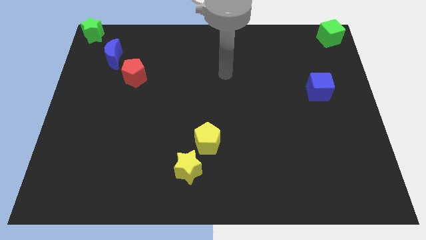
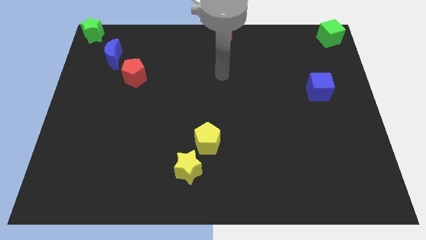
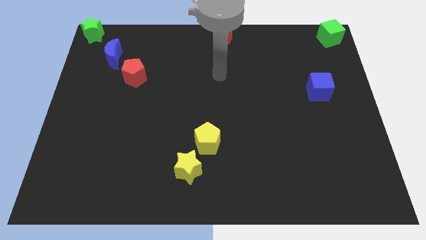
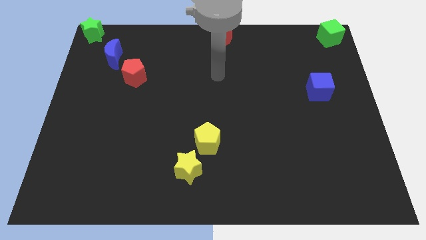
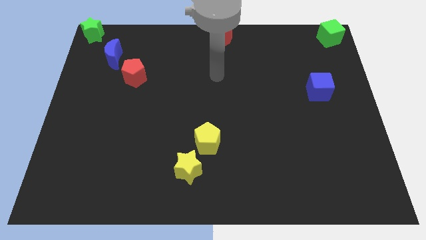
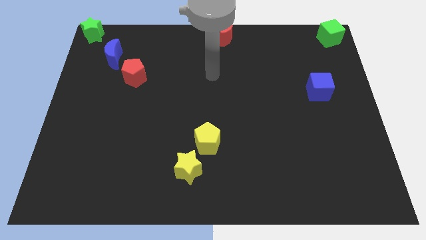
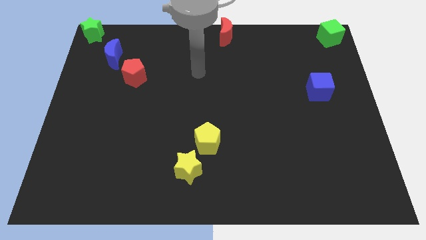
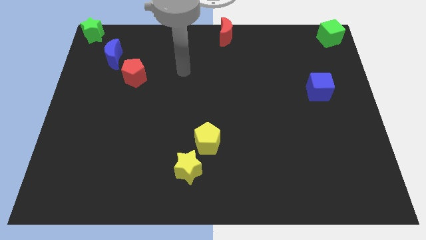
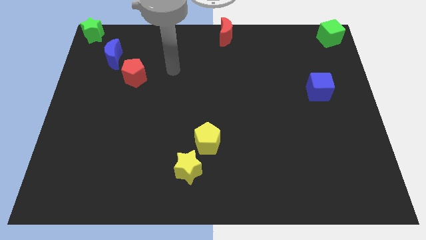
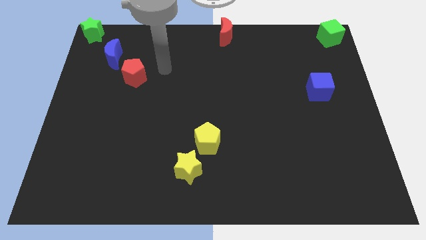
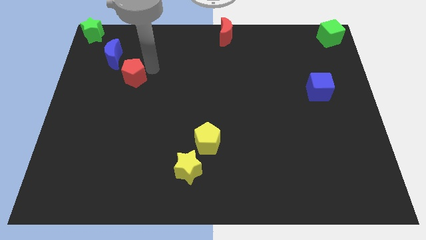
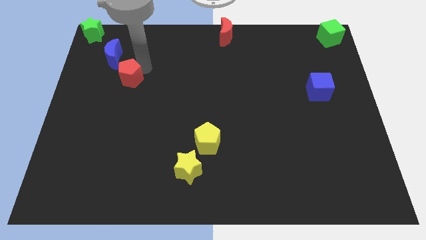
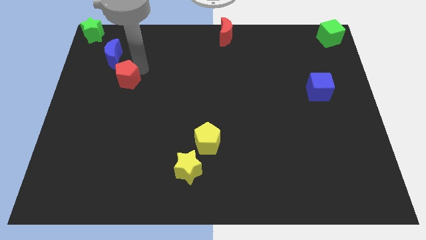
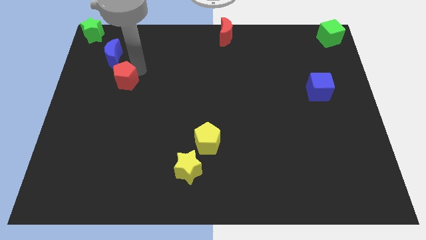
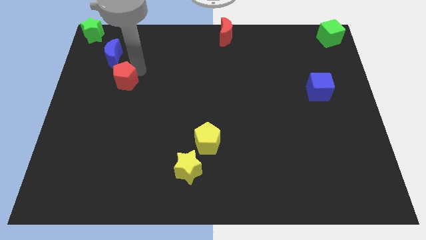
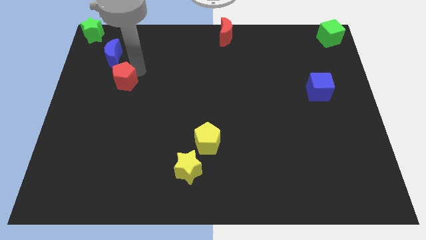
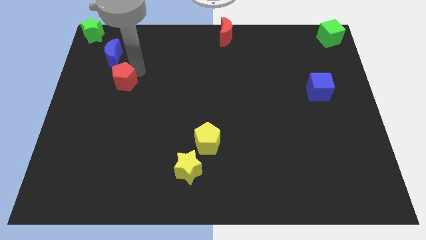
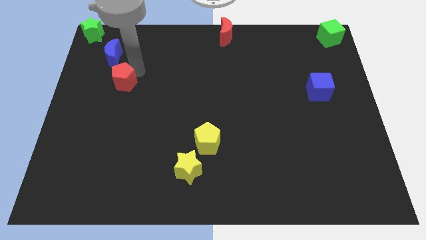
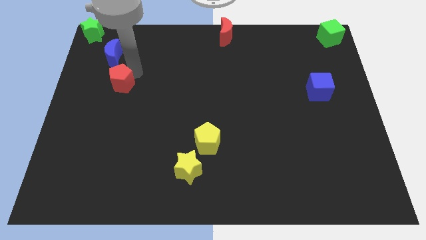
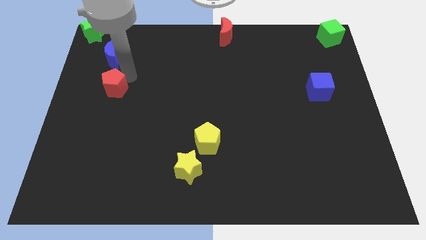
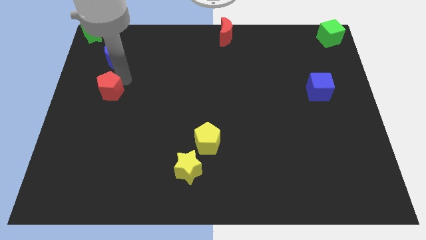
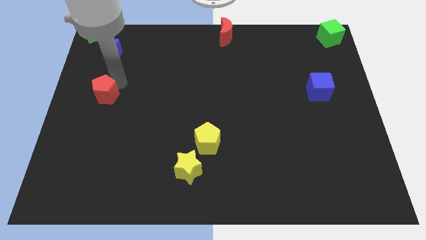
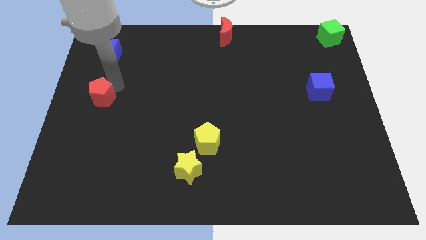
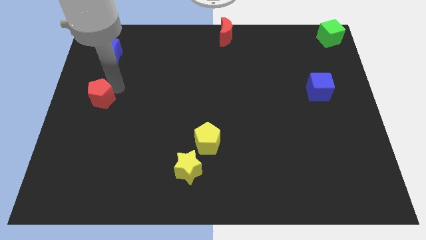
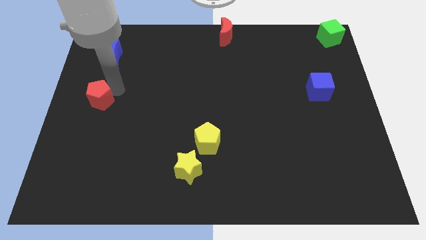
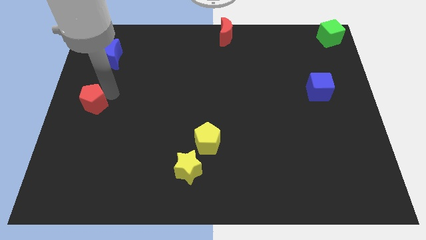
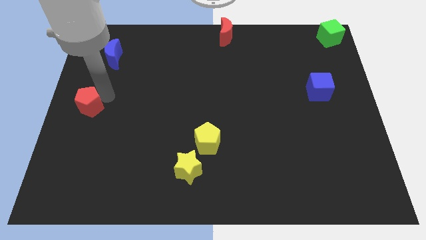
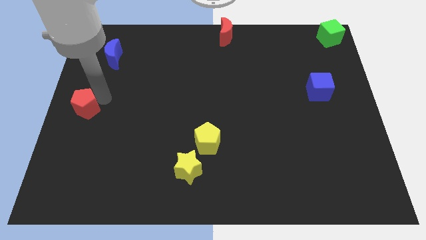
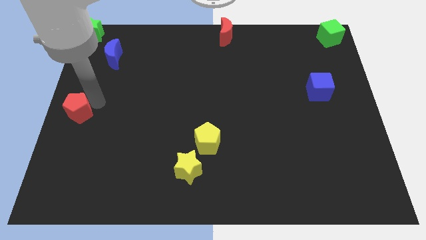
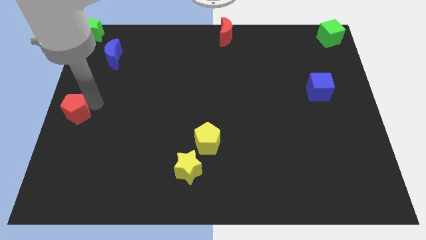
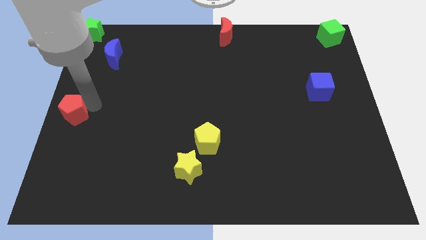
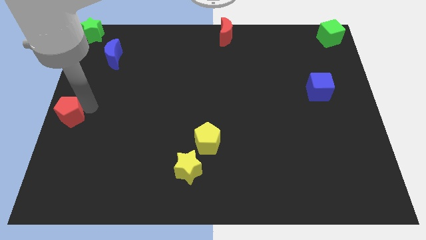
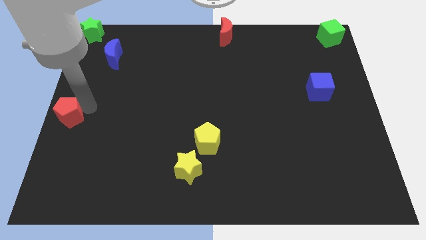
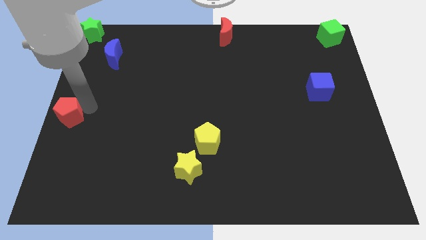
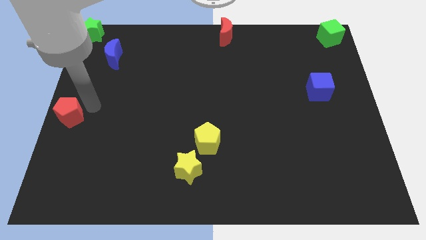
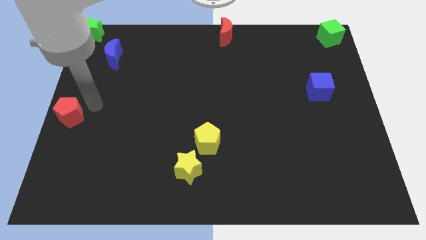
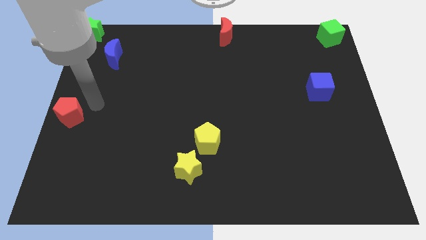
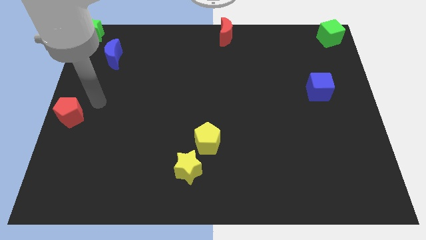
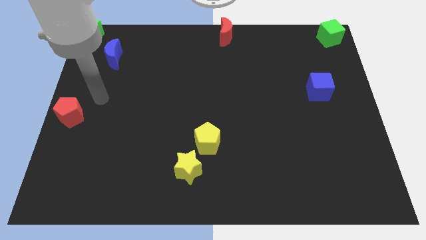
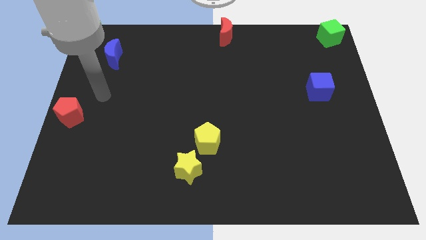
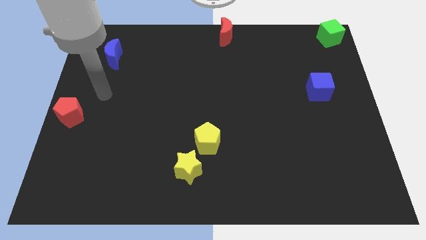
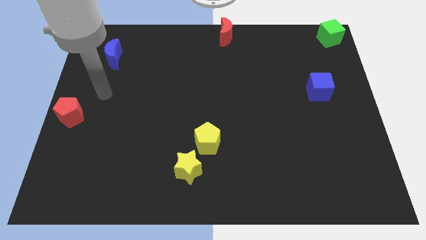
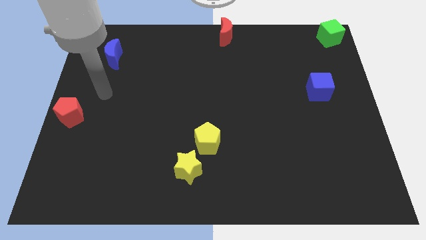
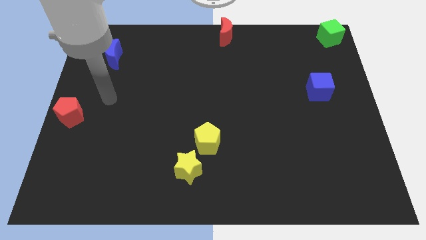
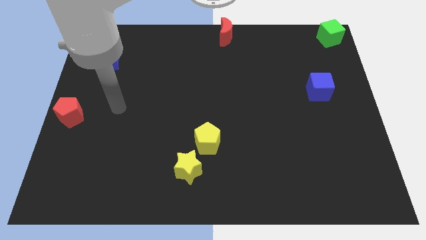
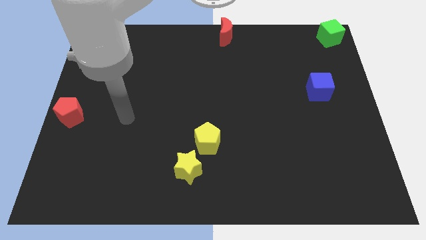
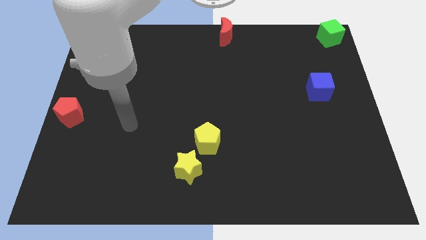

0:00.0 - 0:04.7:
place red pentagon to the left center of the board

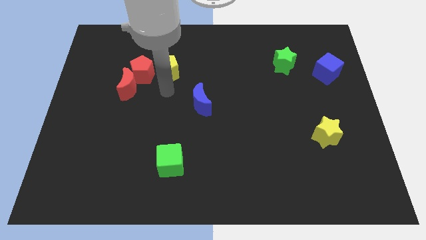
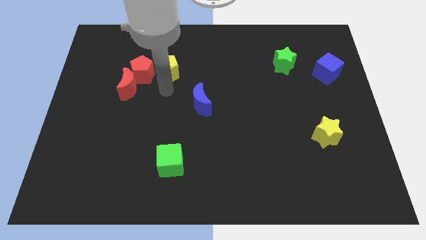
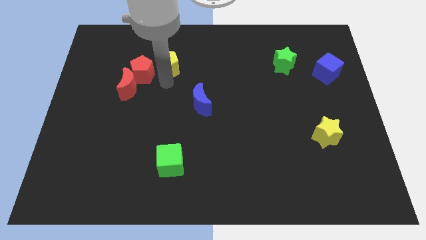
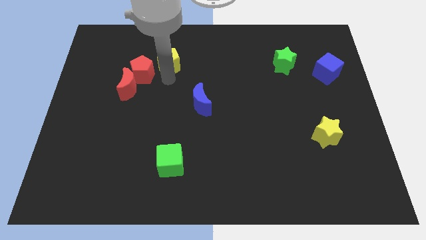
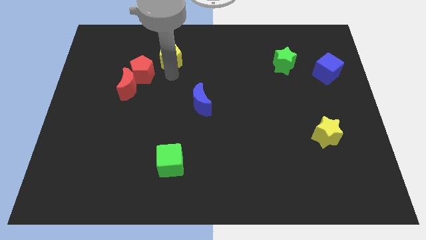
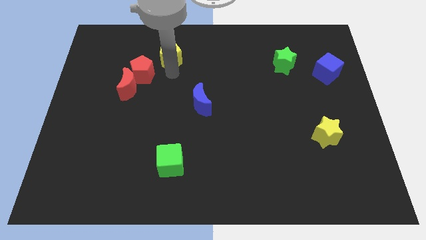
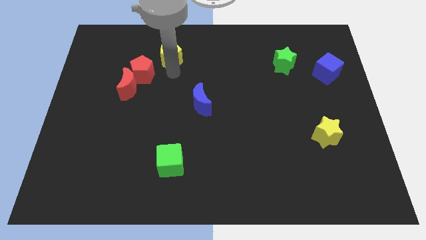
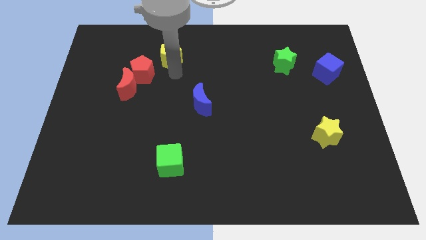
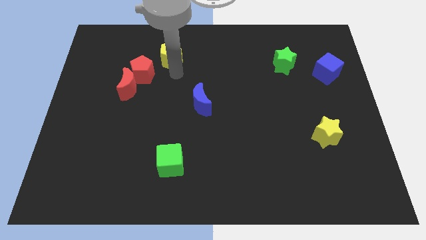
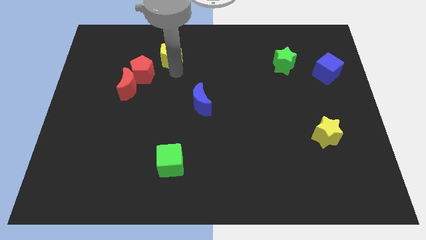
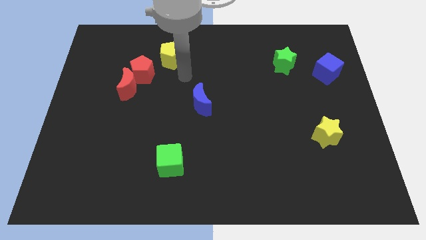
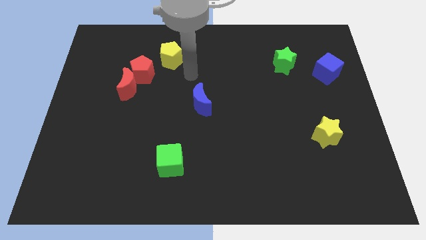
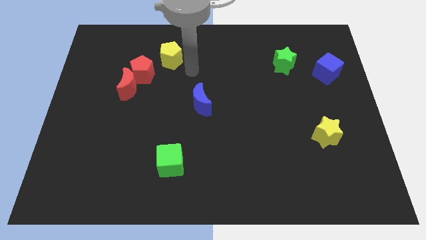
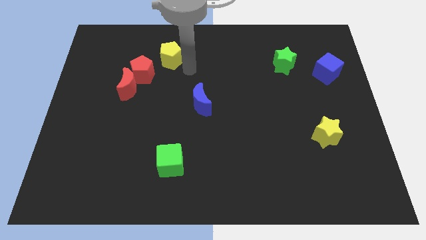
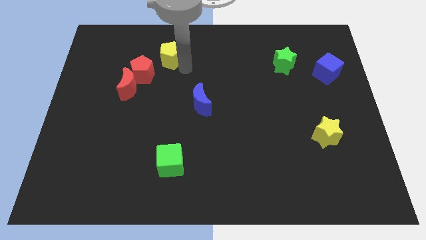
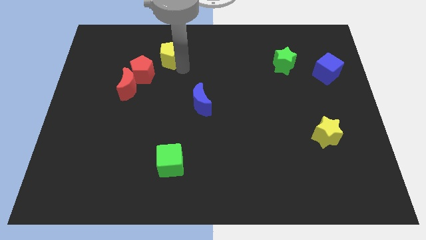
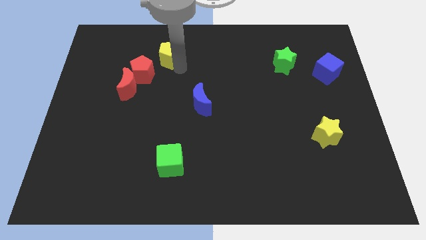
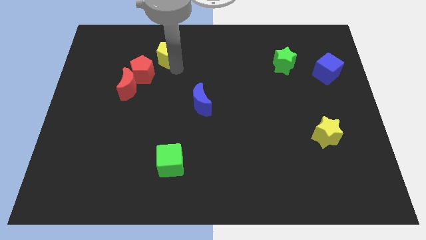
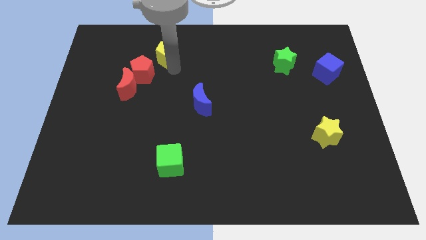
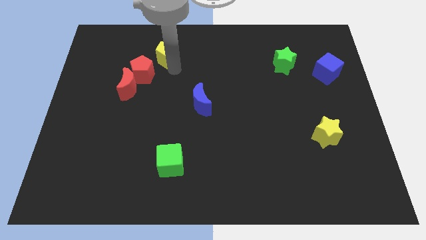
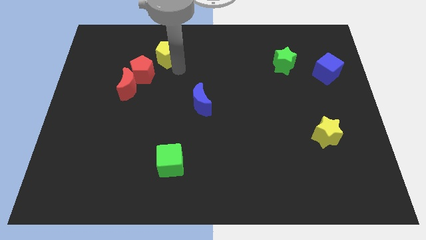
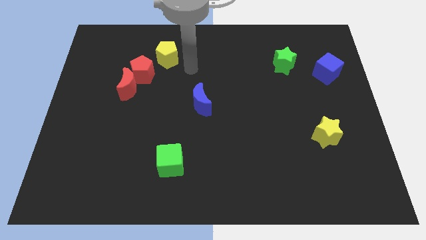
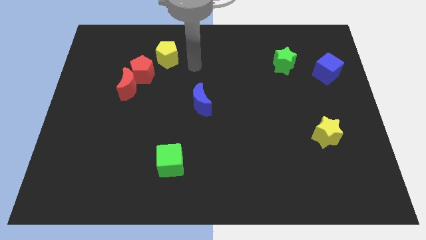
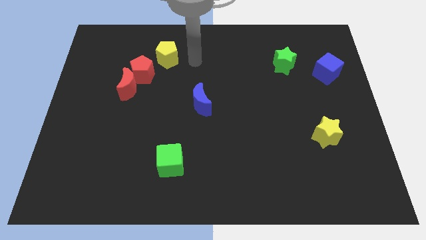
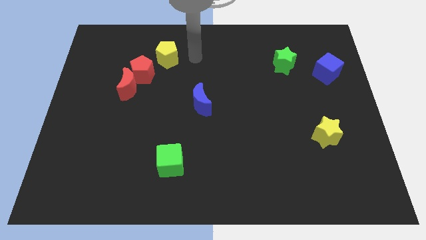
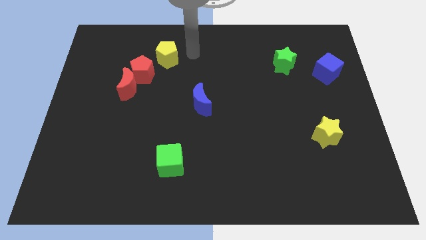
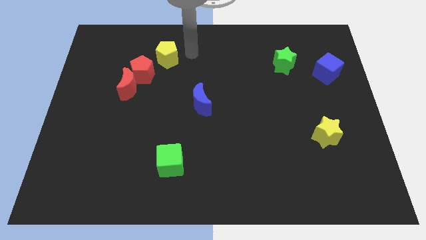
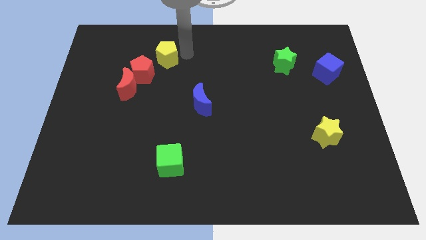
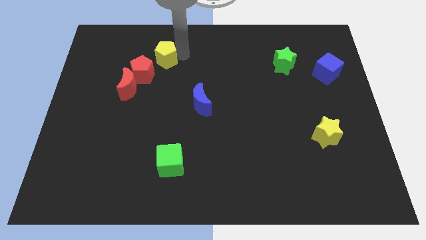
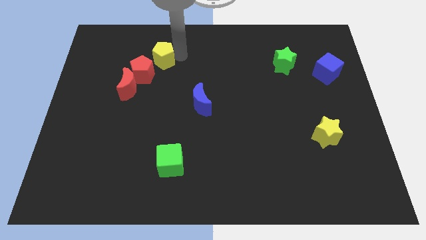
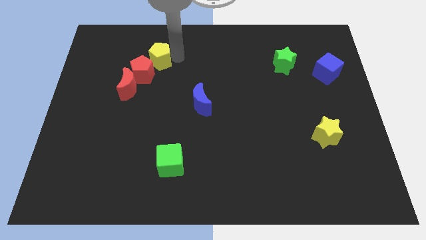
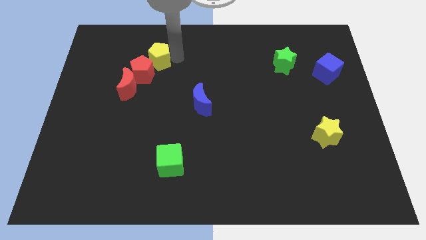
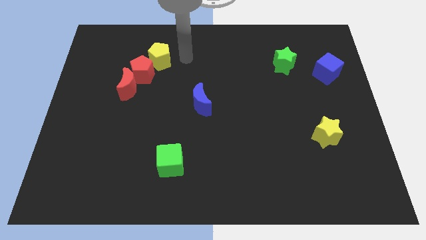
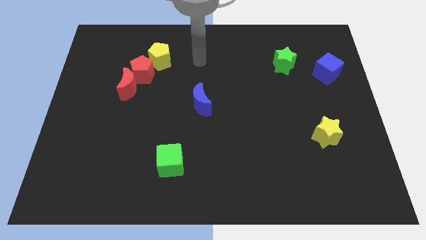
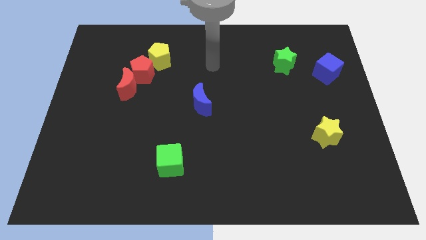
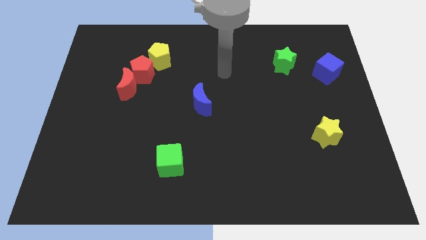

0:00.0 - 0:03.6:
move the yellow pentagon to the top right of the red pentagon

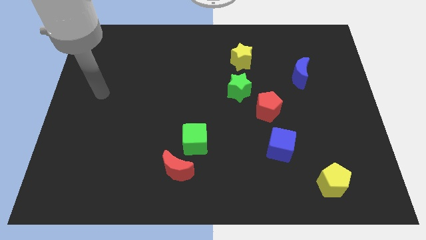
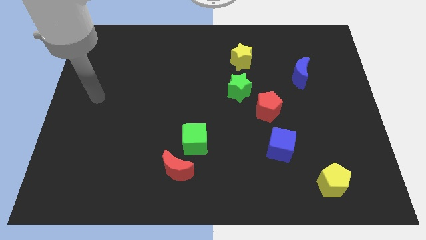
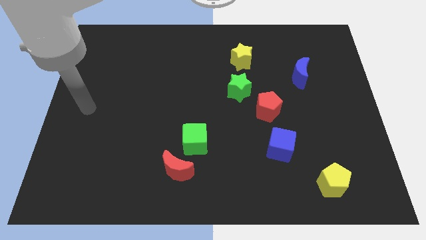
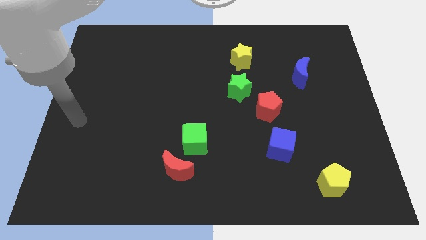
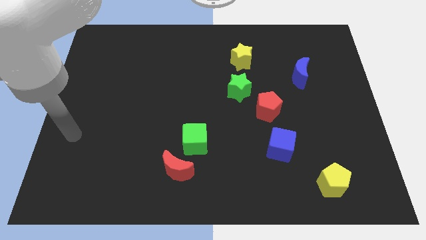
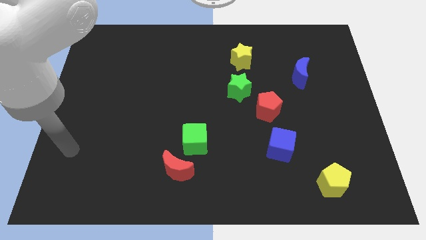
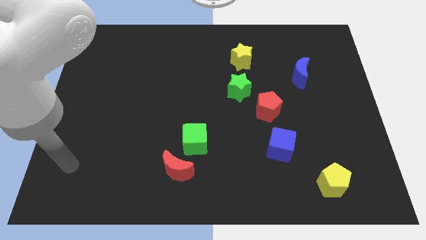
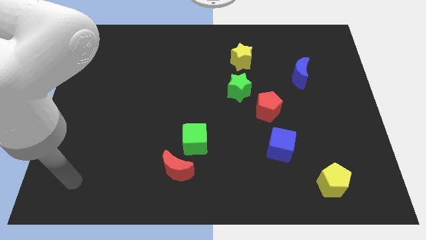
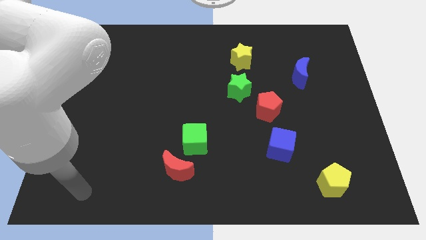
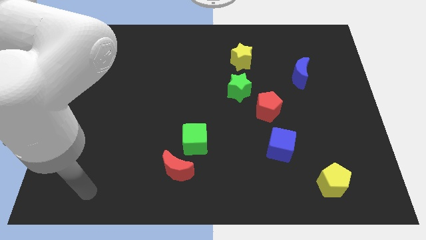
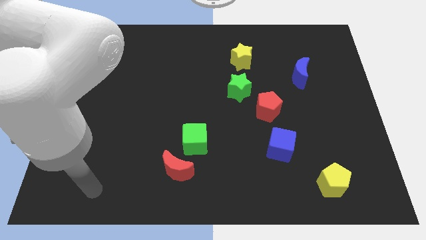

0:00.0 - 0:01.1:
move your hand to the bottom of the board
